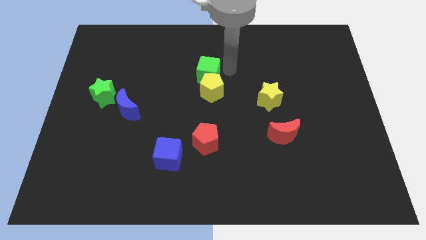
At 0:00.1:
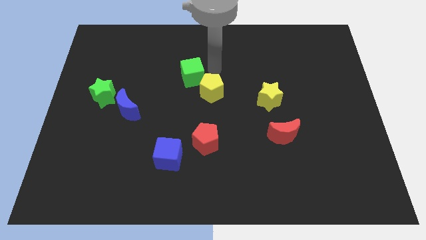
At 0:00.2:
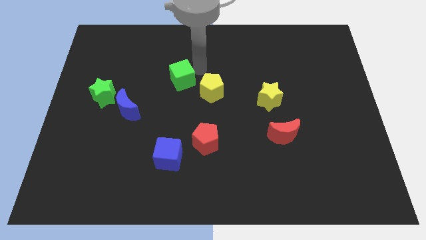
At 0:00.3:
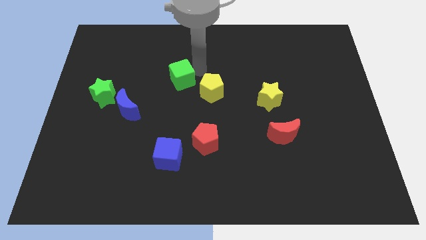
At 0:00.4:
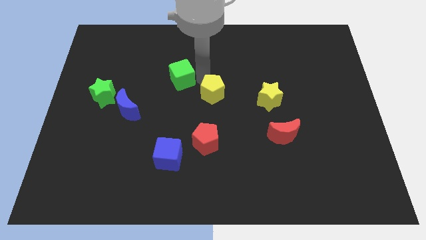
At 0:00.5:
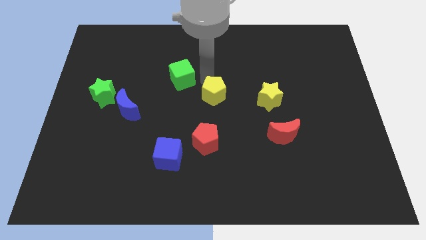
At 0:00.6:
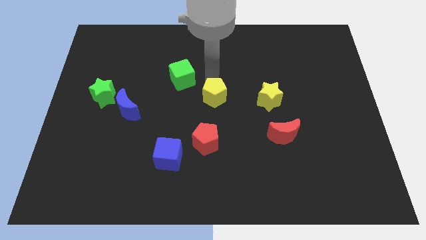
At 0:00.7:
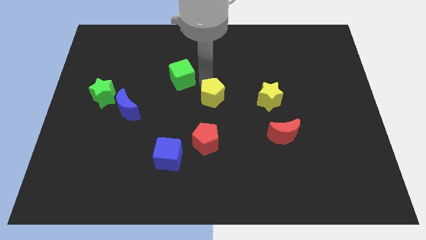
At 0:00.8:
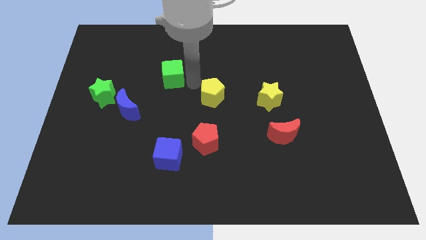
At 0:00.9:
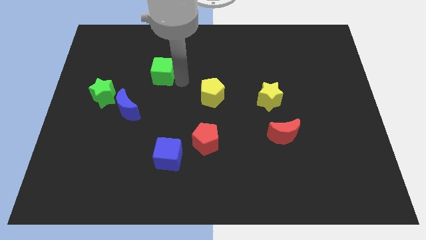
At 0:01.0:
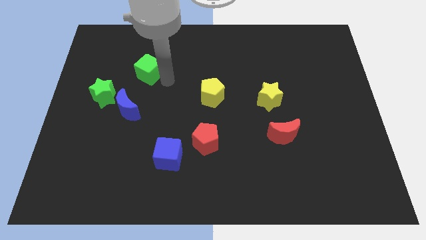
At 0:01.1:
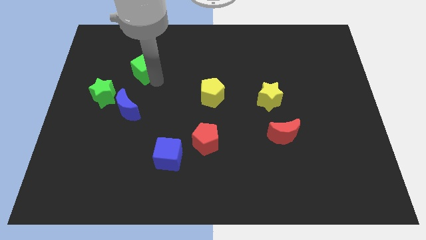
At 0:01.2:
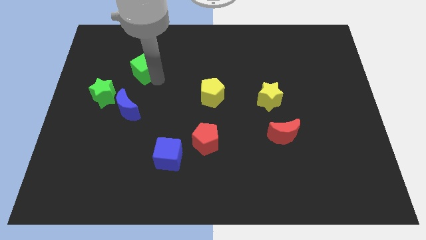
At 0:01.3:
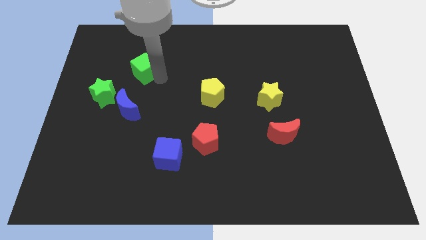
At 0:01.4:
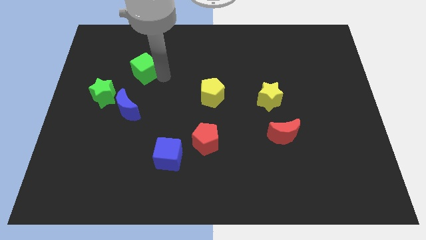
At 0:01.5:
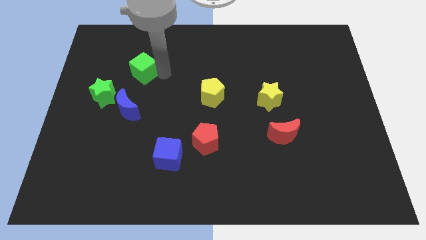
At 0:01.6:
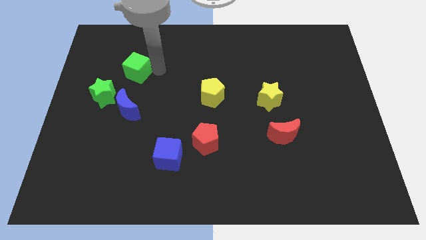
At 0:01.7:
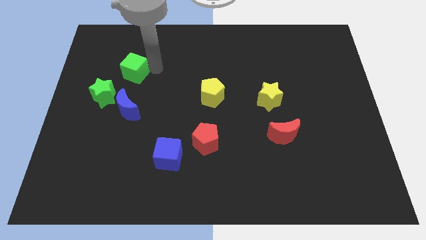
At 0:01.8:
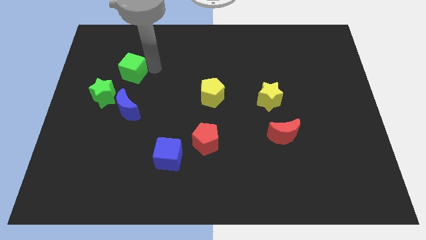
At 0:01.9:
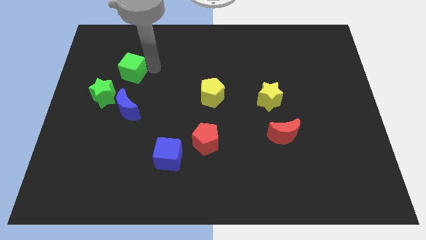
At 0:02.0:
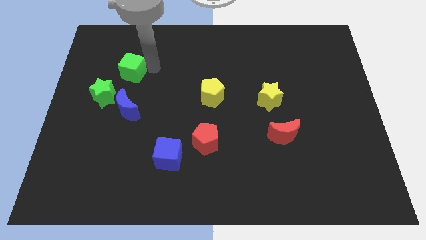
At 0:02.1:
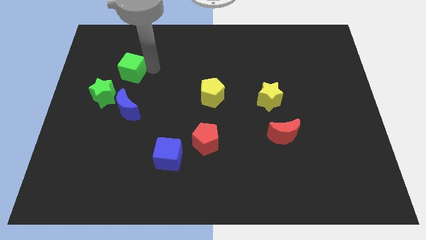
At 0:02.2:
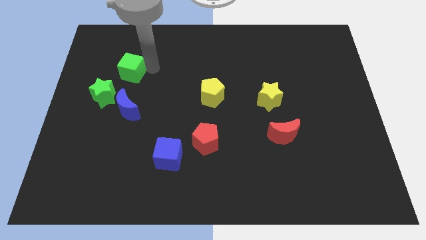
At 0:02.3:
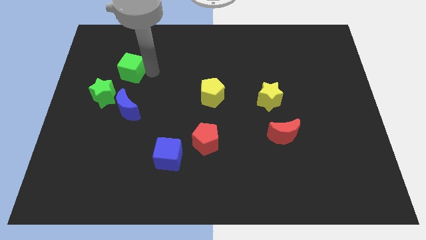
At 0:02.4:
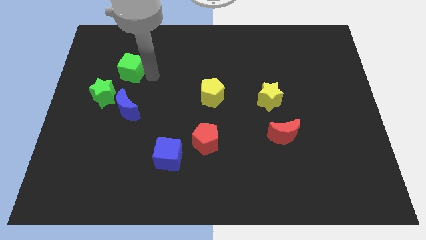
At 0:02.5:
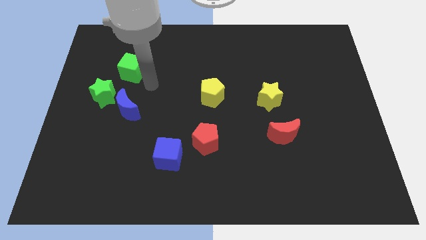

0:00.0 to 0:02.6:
move the green cube diagonally top right to the green star

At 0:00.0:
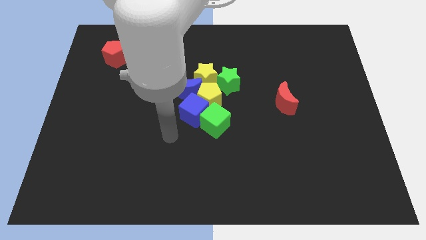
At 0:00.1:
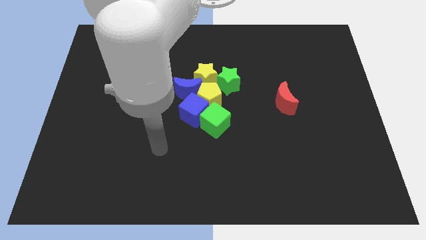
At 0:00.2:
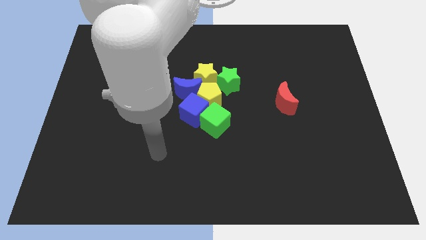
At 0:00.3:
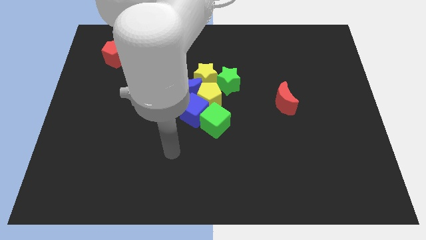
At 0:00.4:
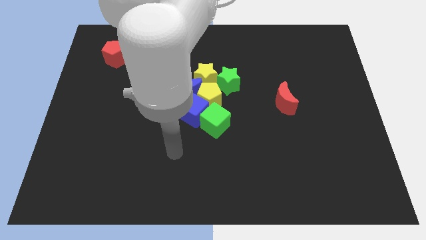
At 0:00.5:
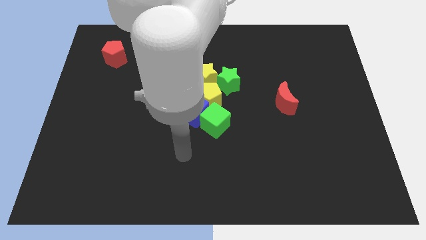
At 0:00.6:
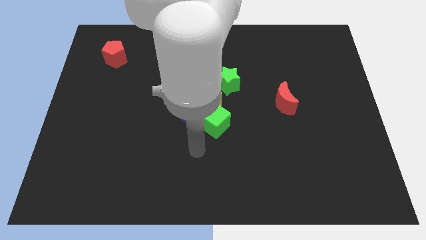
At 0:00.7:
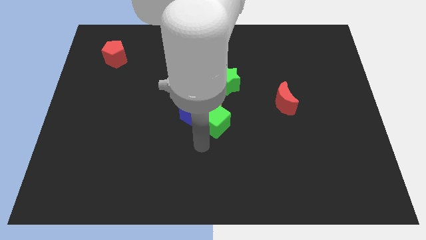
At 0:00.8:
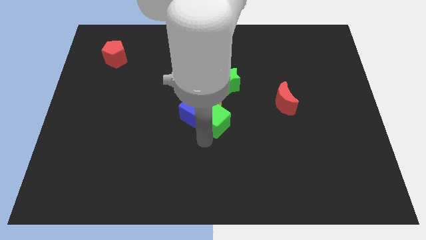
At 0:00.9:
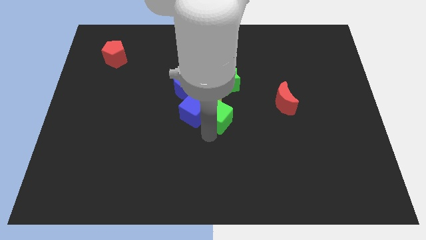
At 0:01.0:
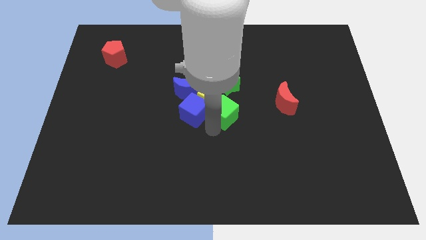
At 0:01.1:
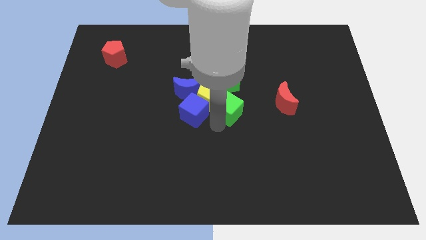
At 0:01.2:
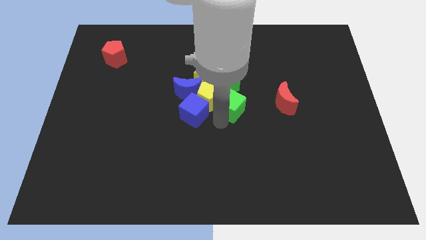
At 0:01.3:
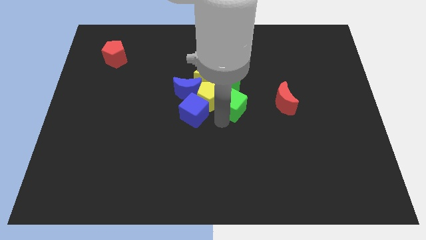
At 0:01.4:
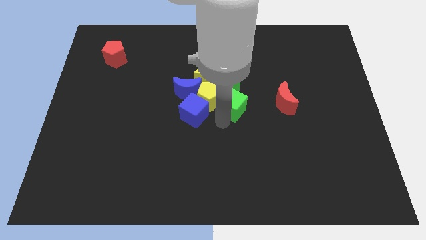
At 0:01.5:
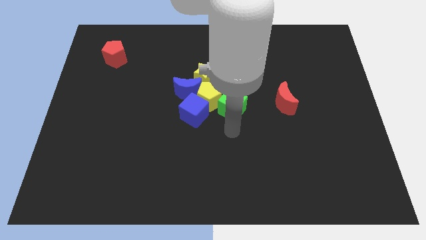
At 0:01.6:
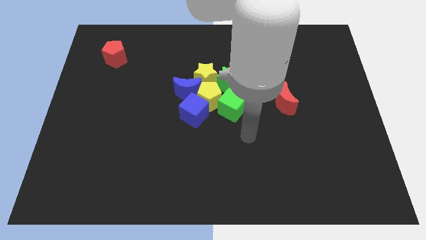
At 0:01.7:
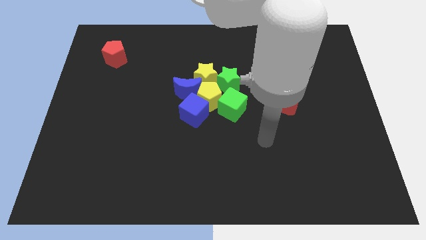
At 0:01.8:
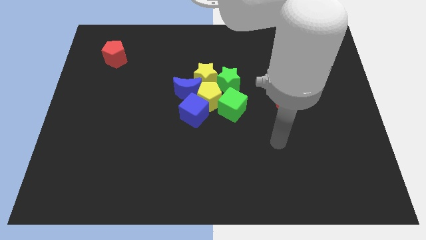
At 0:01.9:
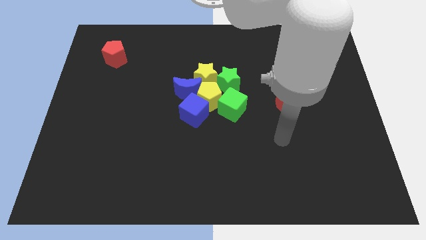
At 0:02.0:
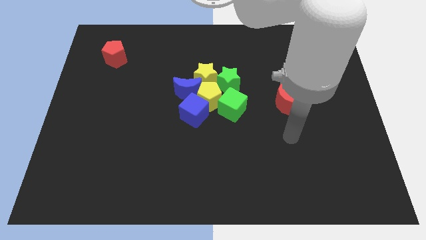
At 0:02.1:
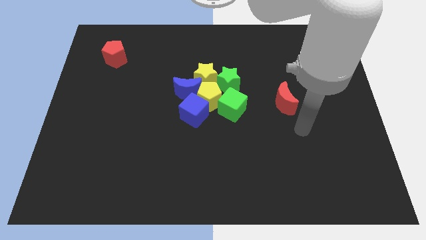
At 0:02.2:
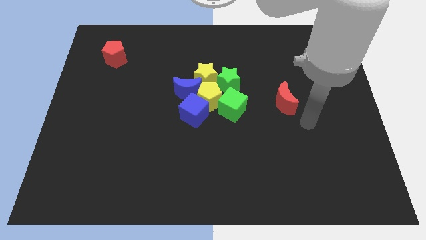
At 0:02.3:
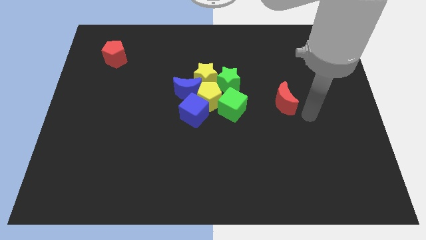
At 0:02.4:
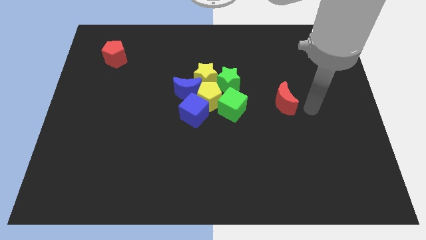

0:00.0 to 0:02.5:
move the green cube to the right of the yellow pentagon

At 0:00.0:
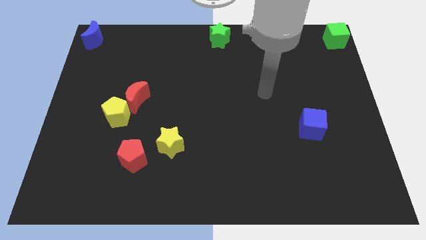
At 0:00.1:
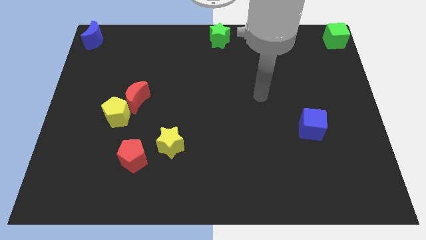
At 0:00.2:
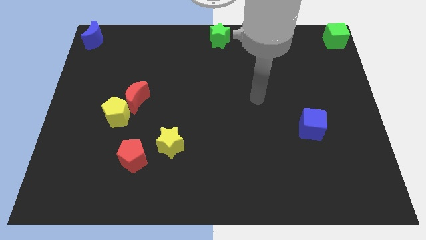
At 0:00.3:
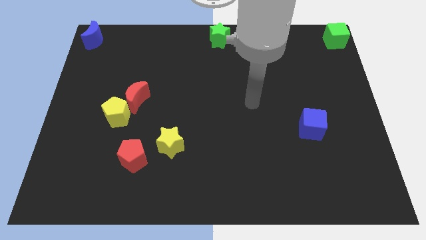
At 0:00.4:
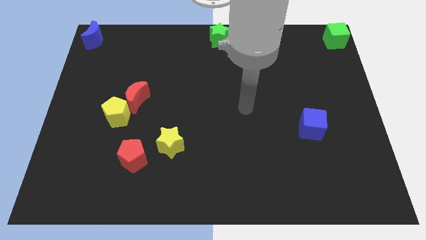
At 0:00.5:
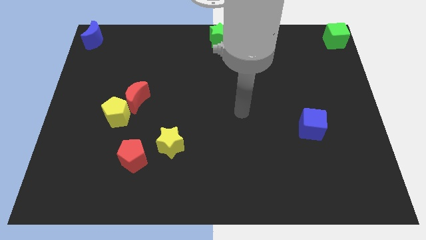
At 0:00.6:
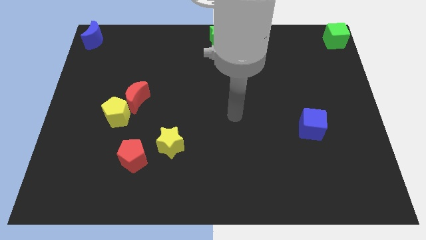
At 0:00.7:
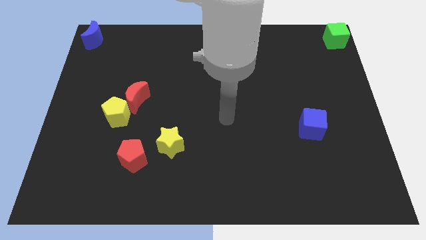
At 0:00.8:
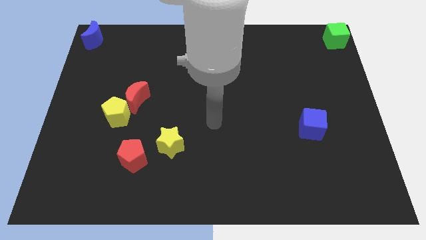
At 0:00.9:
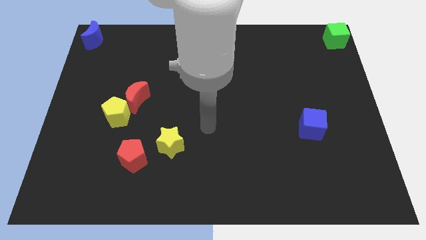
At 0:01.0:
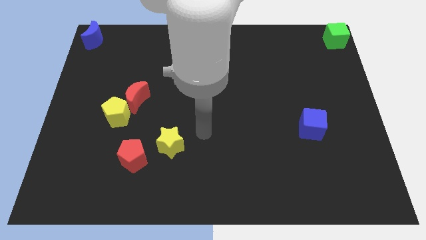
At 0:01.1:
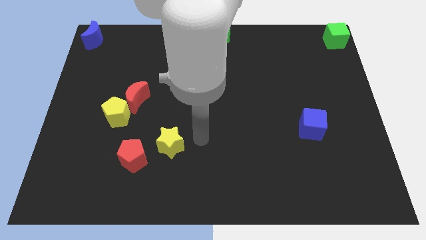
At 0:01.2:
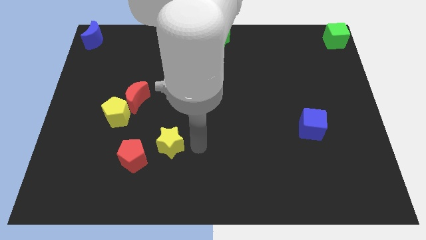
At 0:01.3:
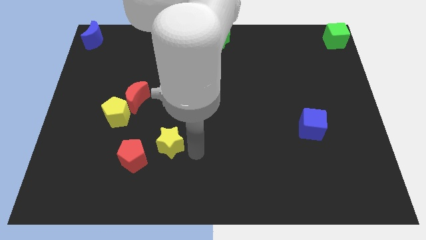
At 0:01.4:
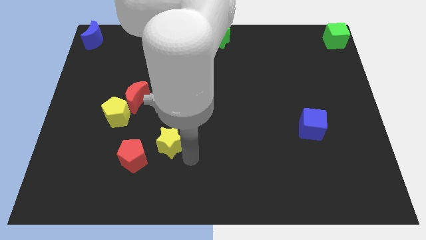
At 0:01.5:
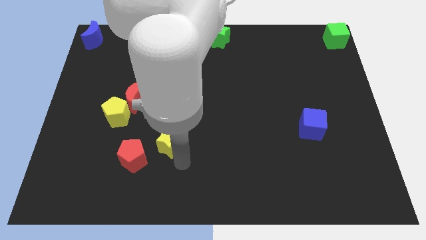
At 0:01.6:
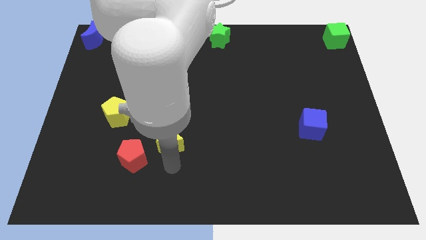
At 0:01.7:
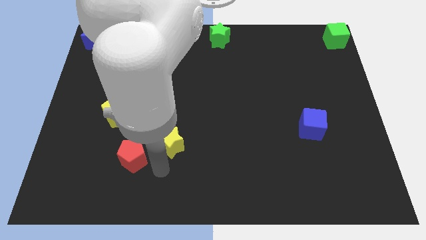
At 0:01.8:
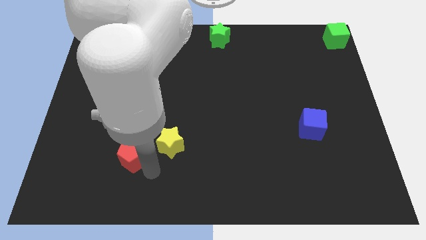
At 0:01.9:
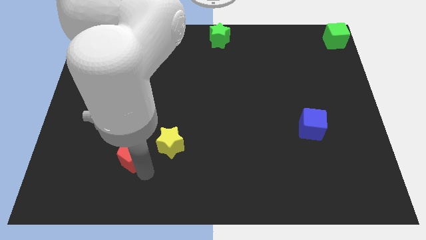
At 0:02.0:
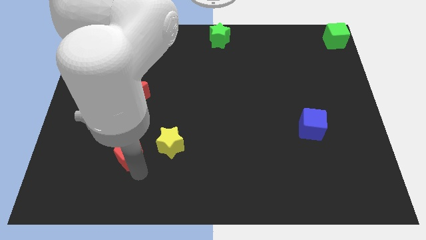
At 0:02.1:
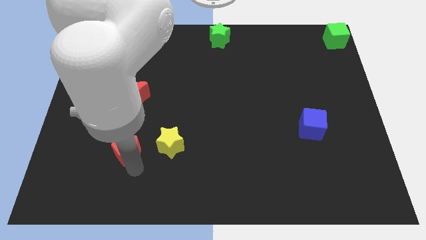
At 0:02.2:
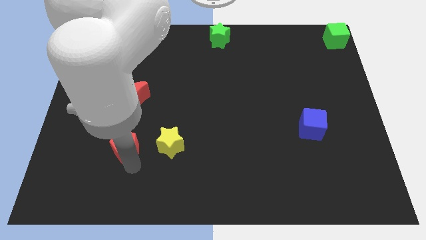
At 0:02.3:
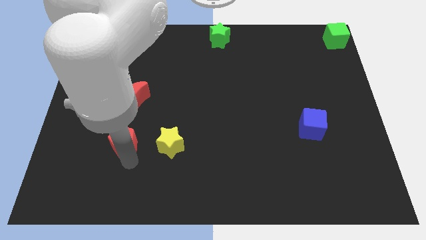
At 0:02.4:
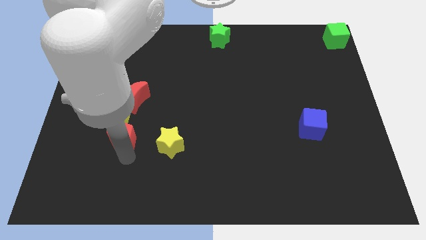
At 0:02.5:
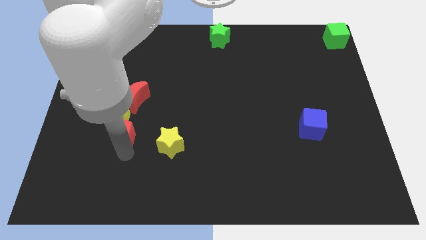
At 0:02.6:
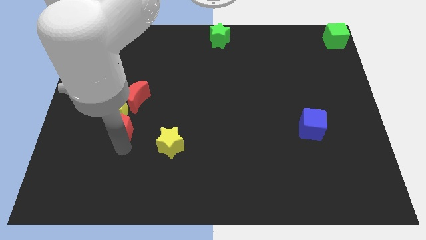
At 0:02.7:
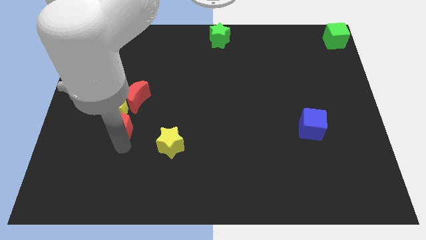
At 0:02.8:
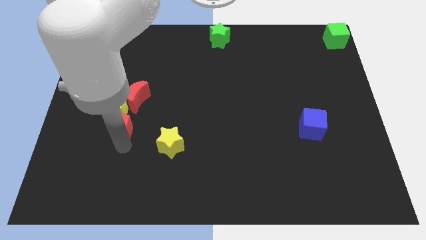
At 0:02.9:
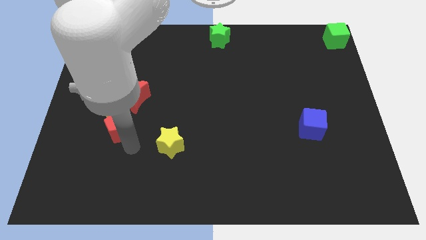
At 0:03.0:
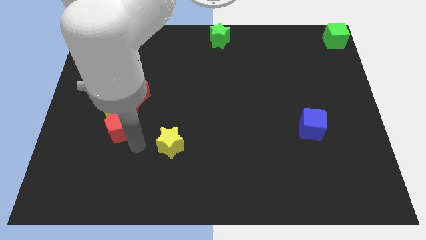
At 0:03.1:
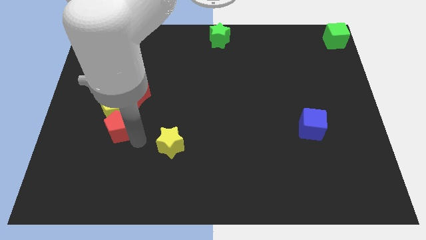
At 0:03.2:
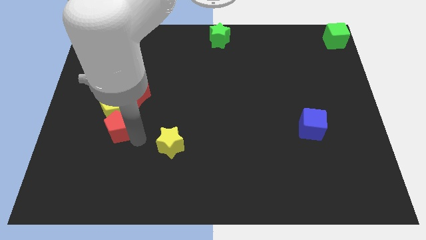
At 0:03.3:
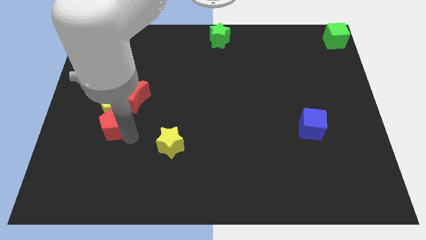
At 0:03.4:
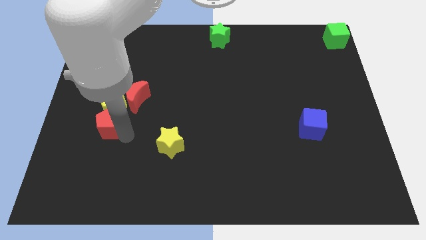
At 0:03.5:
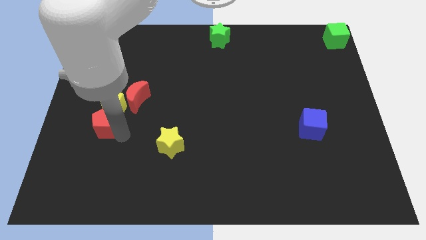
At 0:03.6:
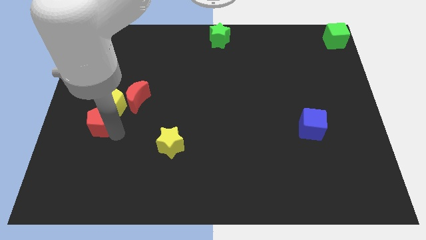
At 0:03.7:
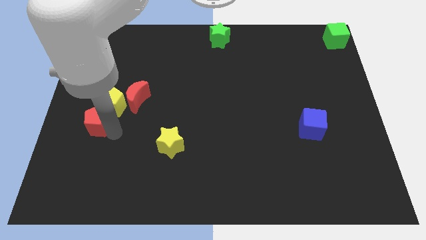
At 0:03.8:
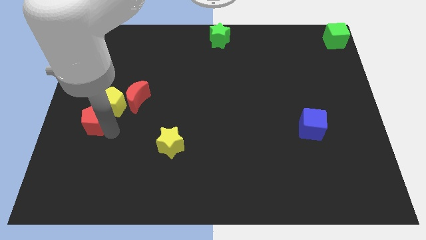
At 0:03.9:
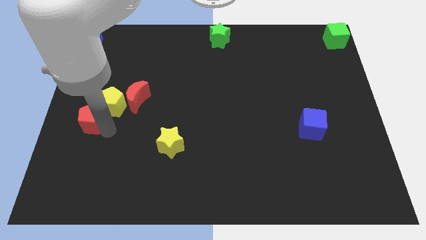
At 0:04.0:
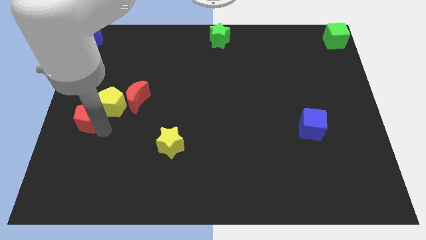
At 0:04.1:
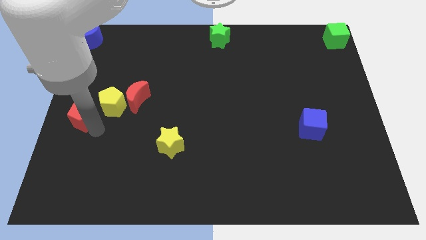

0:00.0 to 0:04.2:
move red pentagon to the left of yellow pentagon
